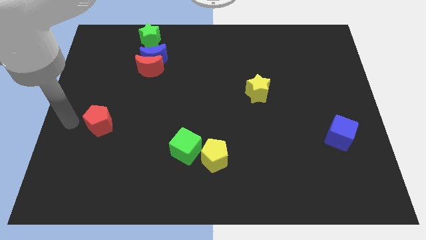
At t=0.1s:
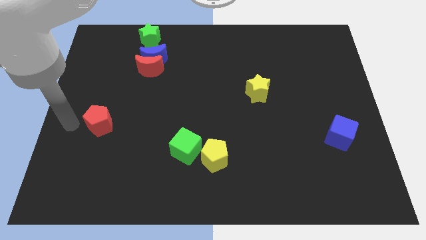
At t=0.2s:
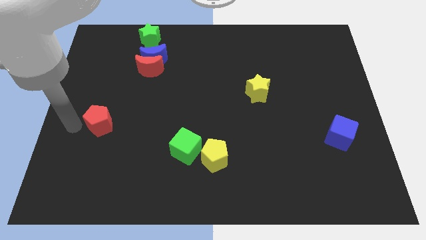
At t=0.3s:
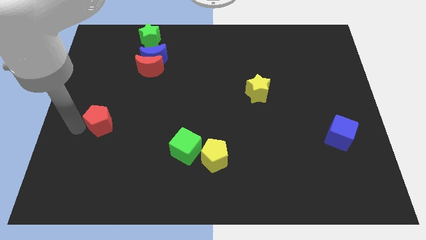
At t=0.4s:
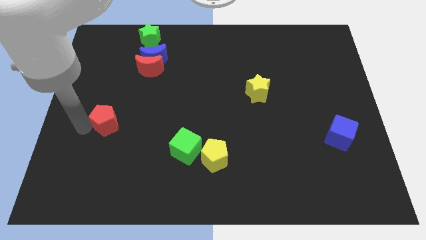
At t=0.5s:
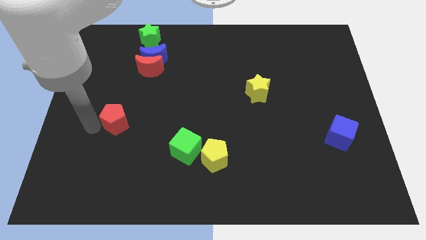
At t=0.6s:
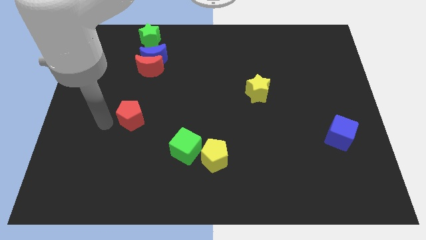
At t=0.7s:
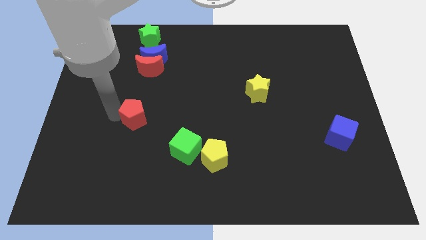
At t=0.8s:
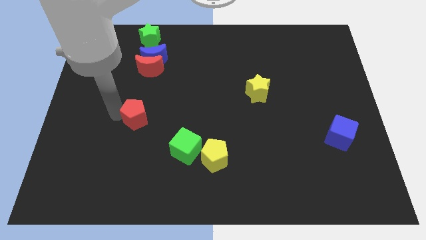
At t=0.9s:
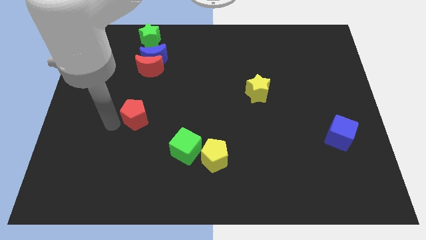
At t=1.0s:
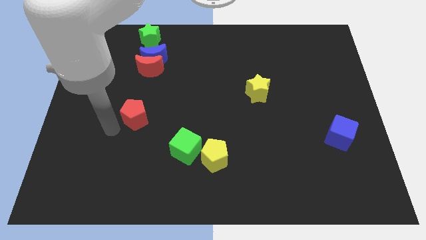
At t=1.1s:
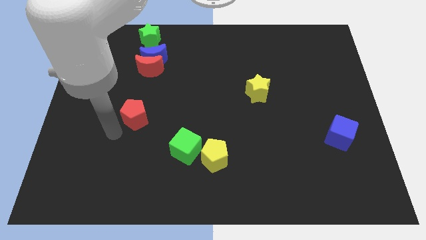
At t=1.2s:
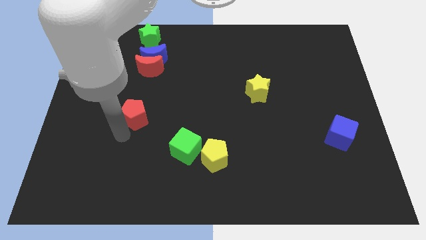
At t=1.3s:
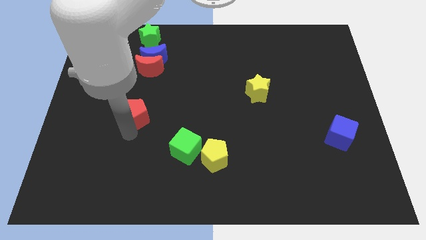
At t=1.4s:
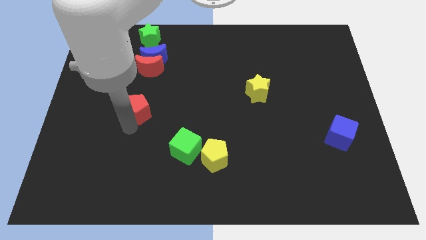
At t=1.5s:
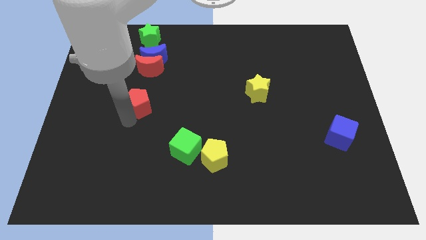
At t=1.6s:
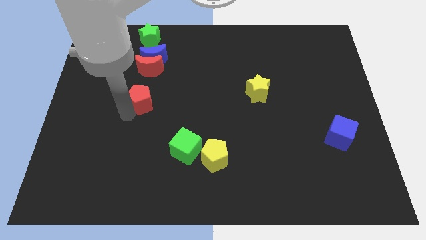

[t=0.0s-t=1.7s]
place the red pentagon towards the red crescent

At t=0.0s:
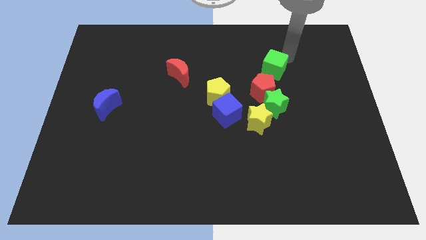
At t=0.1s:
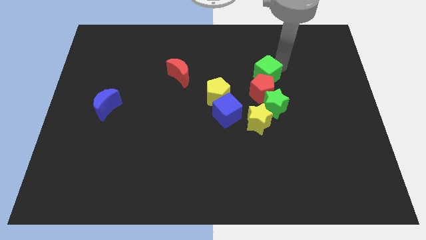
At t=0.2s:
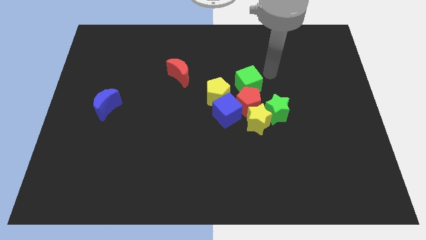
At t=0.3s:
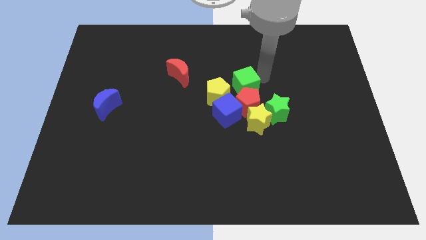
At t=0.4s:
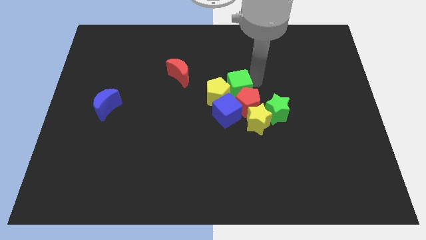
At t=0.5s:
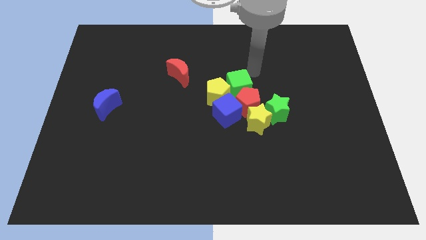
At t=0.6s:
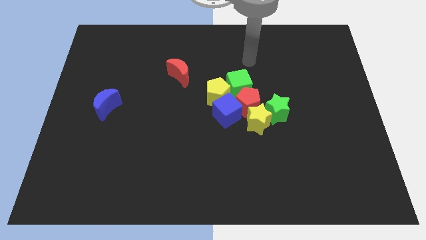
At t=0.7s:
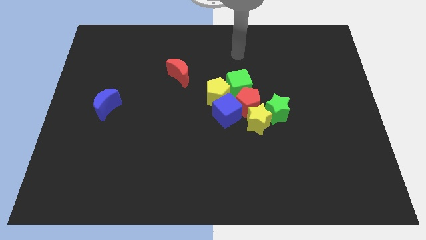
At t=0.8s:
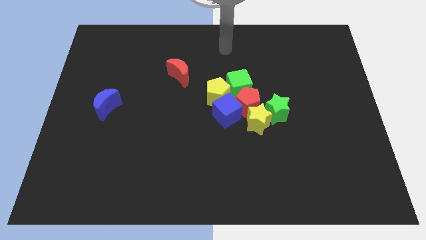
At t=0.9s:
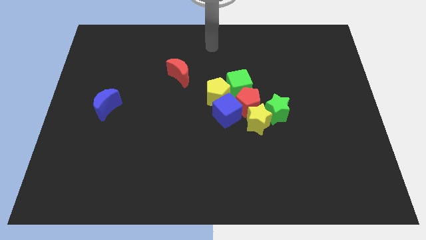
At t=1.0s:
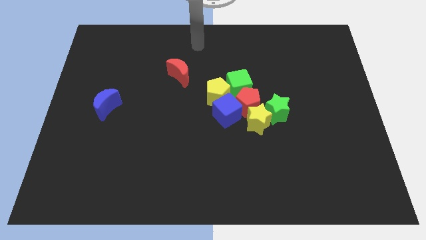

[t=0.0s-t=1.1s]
move the green cube to the right of the yellow pentagon

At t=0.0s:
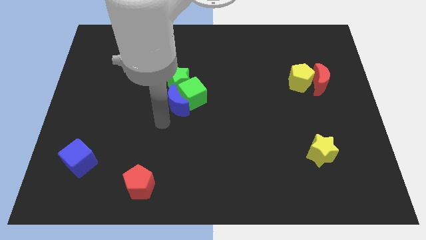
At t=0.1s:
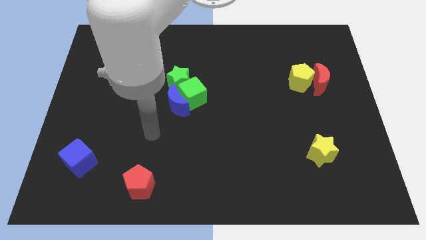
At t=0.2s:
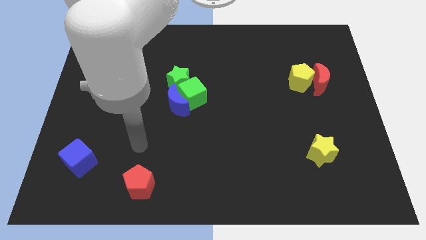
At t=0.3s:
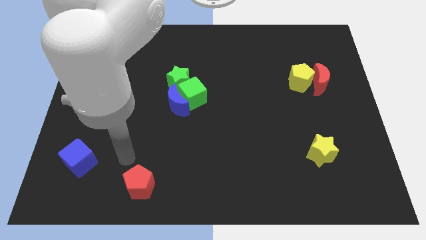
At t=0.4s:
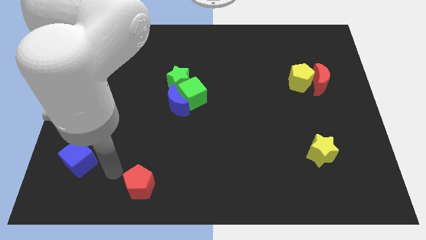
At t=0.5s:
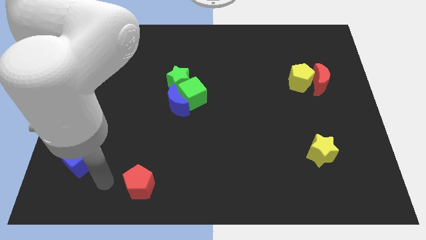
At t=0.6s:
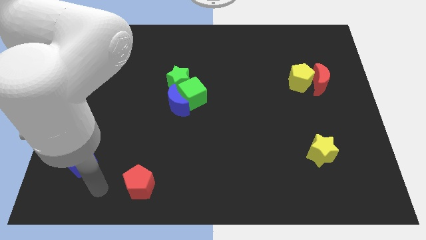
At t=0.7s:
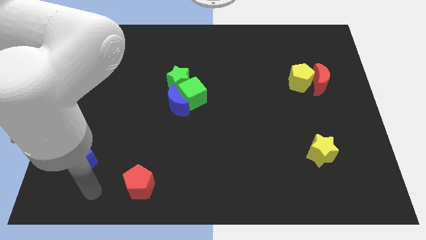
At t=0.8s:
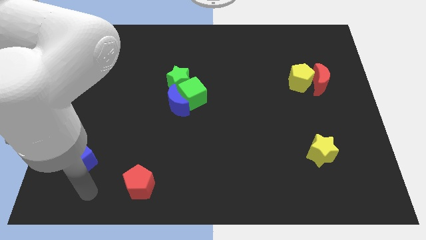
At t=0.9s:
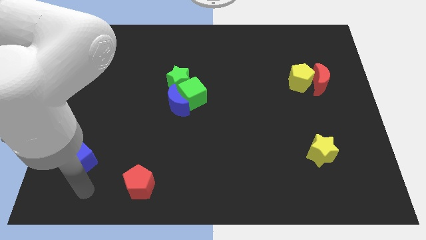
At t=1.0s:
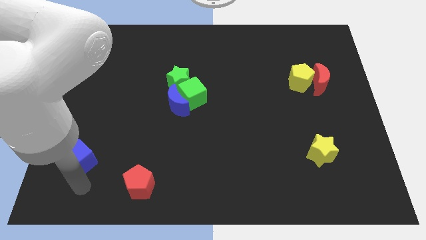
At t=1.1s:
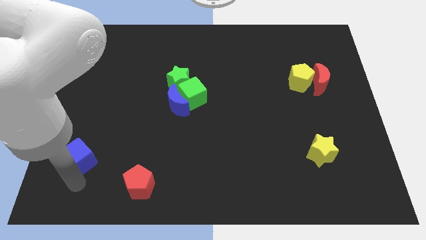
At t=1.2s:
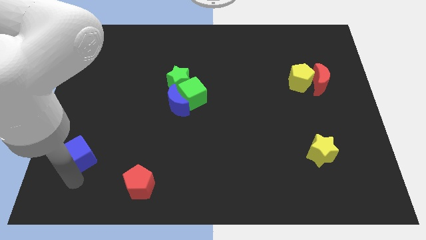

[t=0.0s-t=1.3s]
place your hand at the bottom of the blue cube

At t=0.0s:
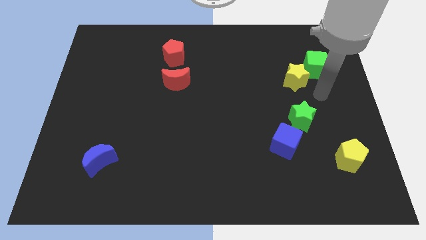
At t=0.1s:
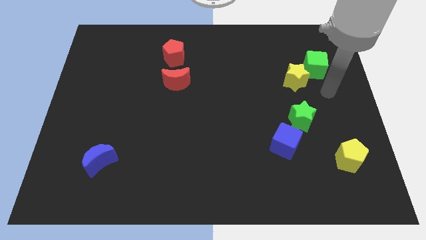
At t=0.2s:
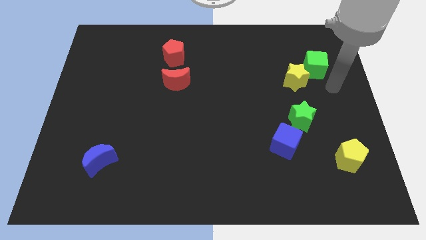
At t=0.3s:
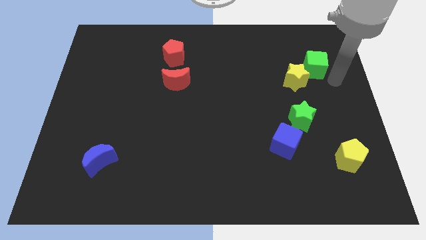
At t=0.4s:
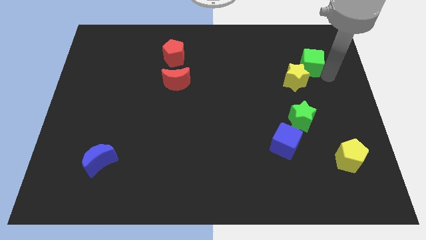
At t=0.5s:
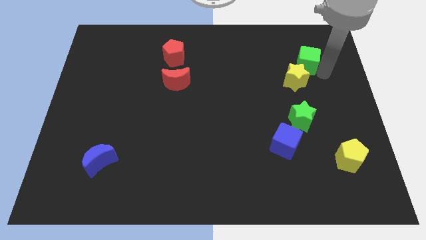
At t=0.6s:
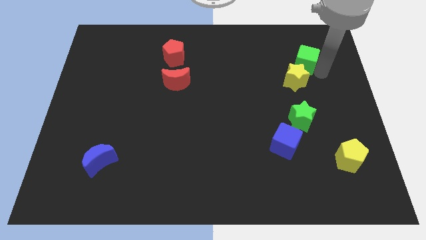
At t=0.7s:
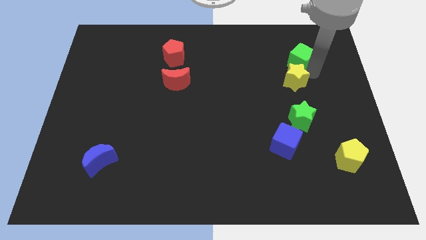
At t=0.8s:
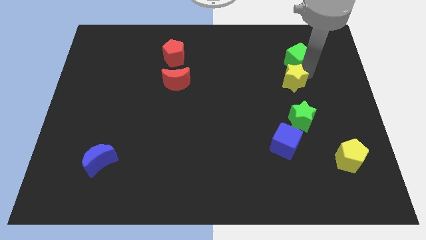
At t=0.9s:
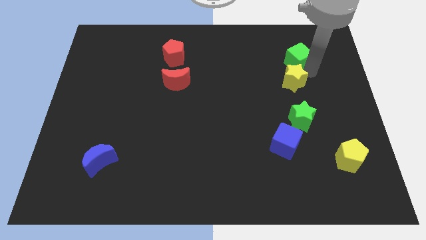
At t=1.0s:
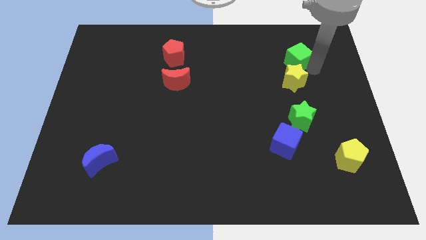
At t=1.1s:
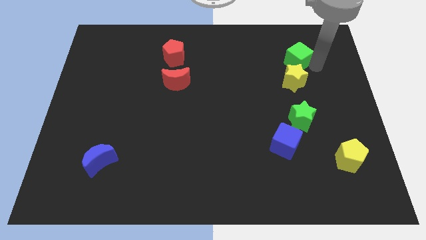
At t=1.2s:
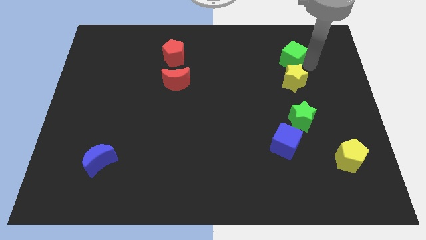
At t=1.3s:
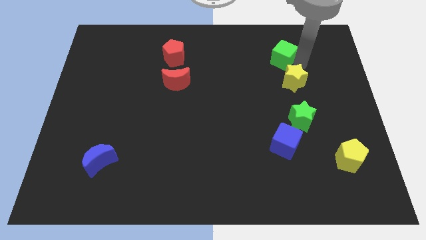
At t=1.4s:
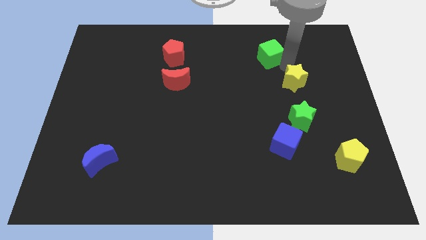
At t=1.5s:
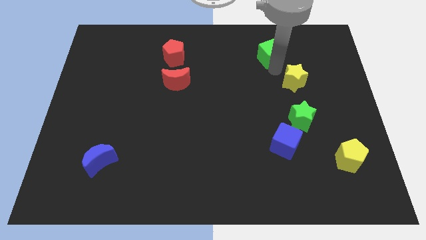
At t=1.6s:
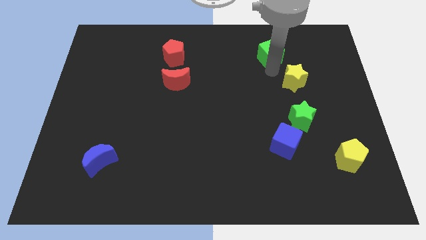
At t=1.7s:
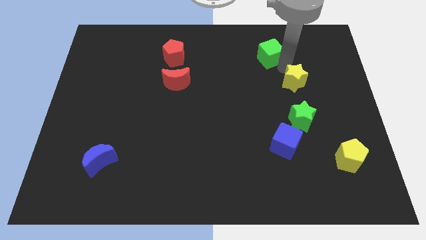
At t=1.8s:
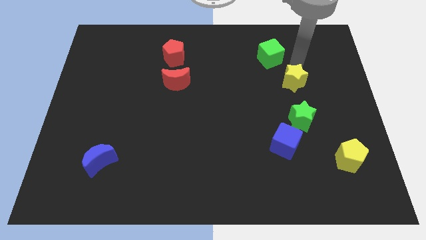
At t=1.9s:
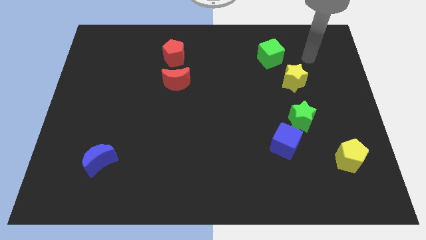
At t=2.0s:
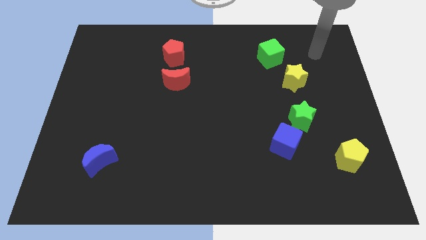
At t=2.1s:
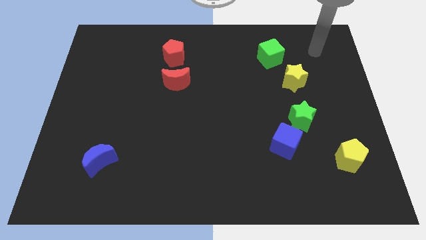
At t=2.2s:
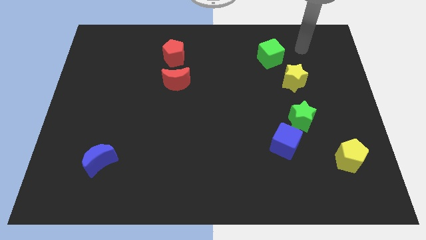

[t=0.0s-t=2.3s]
separate green cube and yellow star

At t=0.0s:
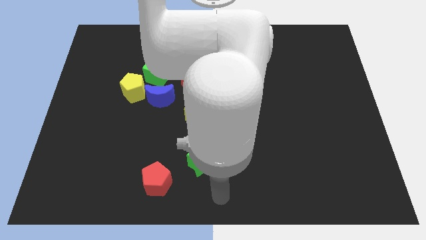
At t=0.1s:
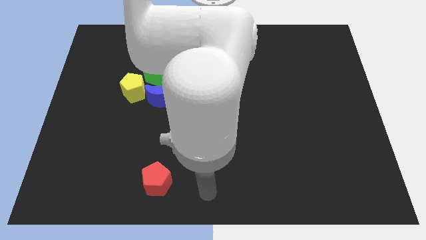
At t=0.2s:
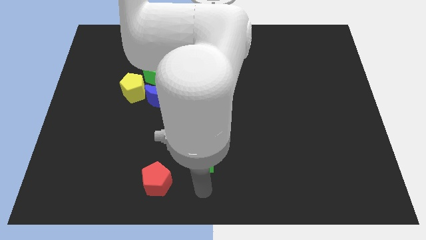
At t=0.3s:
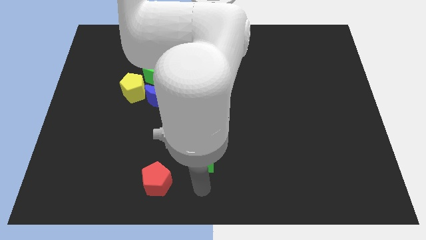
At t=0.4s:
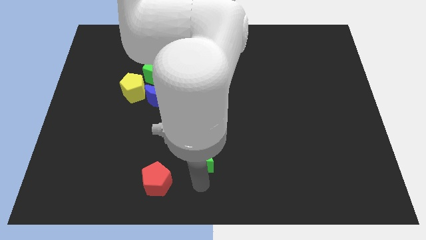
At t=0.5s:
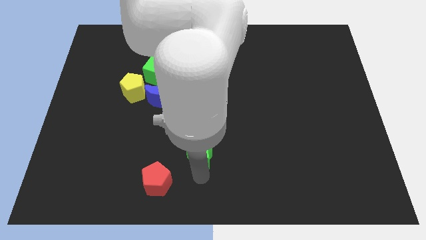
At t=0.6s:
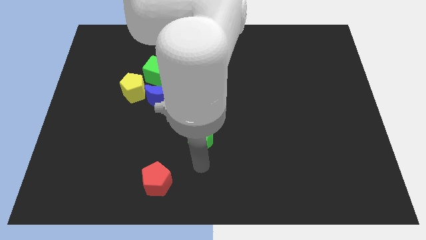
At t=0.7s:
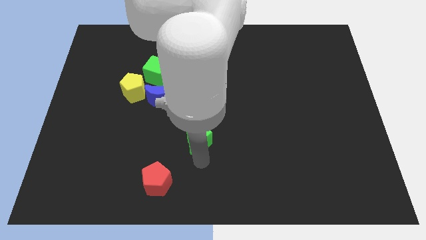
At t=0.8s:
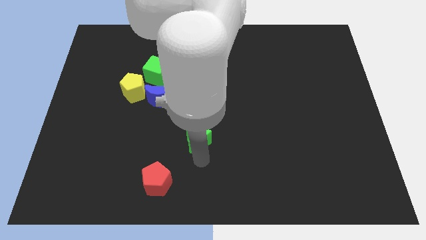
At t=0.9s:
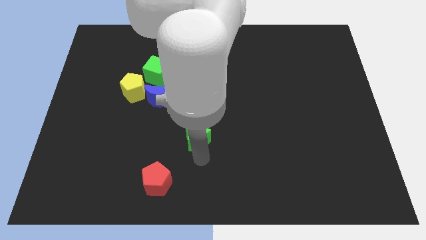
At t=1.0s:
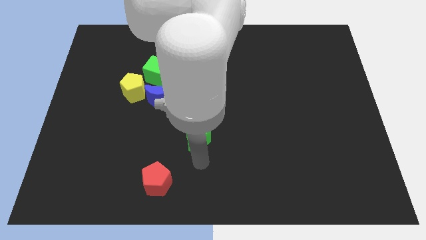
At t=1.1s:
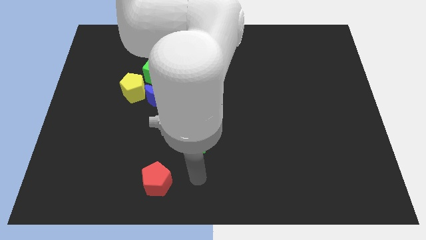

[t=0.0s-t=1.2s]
move the green star slightly upwards

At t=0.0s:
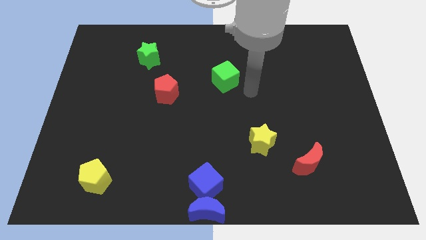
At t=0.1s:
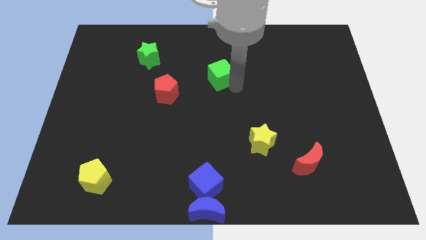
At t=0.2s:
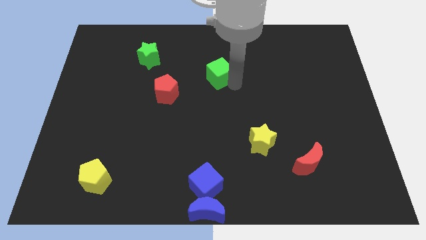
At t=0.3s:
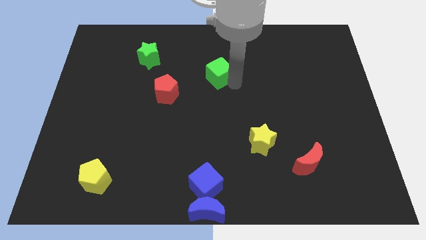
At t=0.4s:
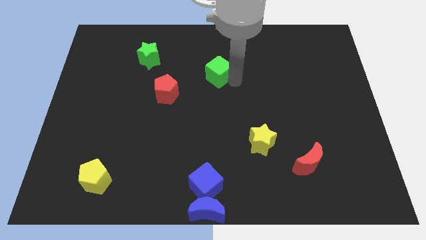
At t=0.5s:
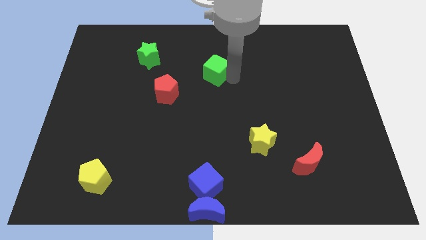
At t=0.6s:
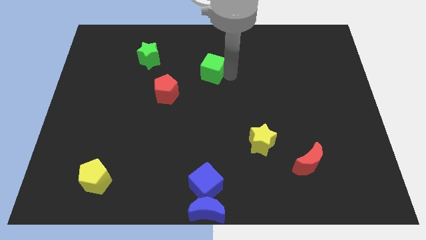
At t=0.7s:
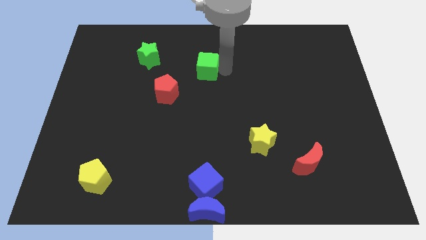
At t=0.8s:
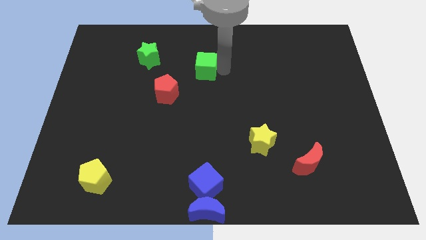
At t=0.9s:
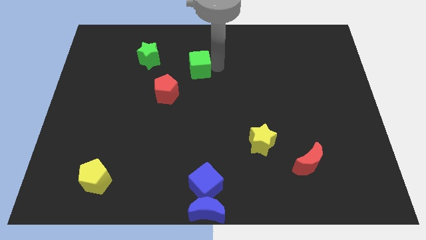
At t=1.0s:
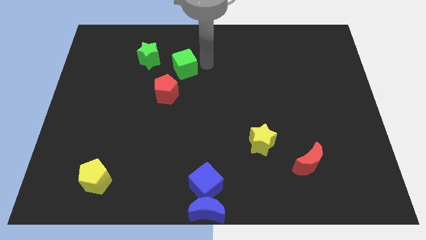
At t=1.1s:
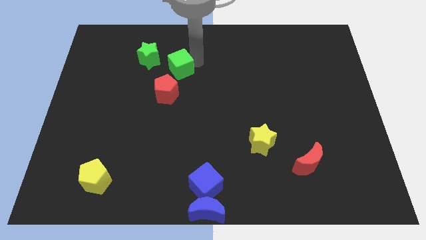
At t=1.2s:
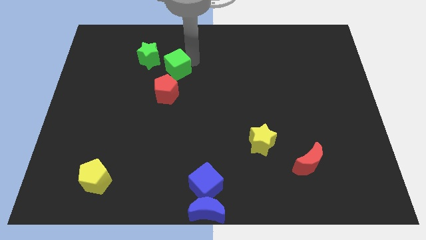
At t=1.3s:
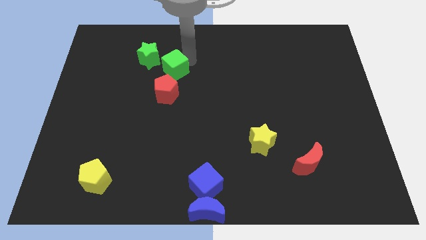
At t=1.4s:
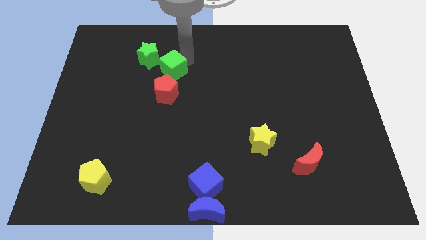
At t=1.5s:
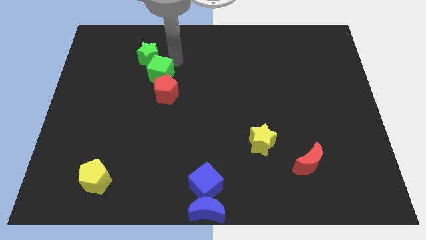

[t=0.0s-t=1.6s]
put the green cube between the red pentagon and green star
